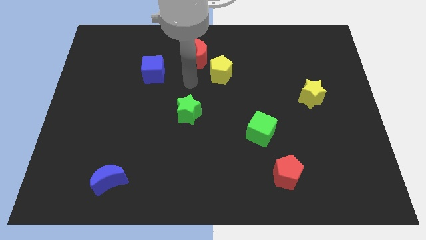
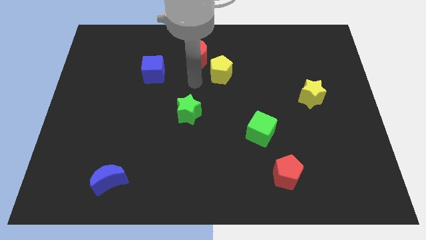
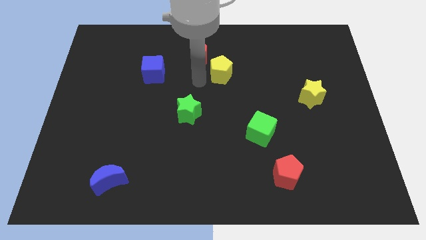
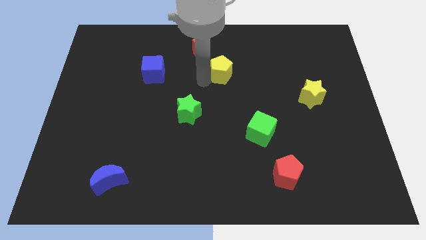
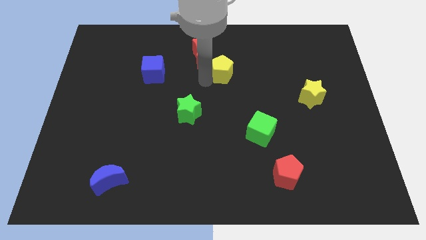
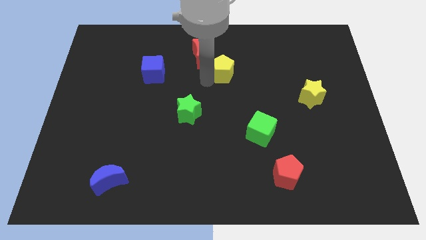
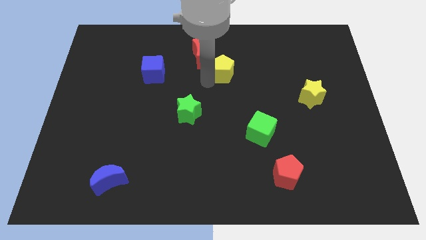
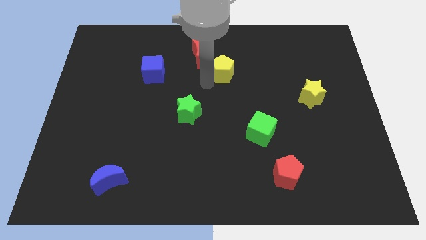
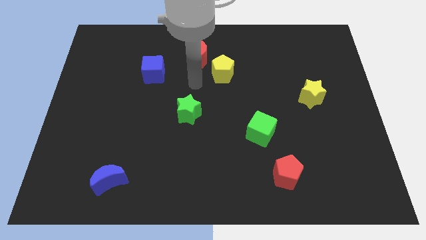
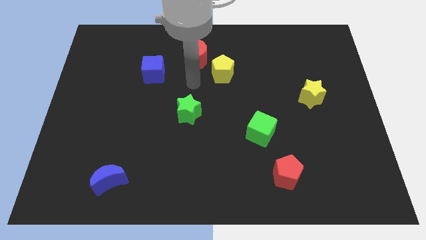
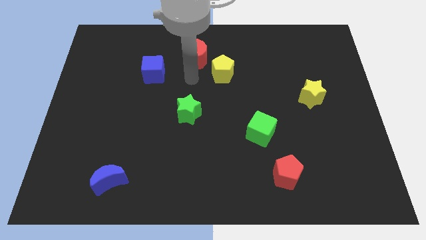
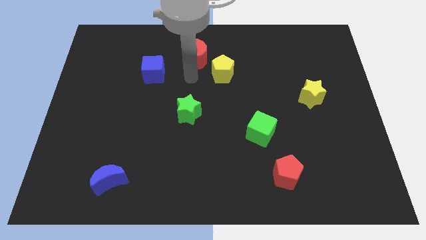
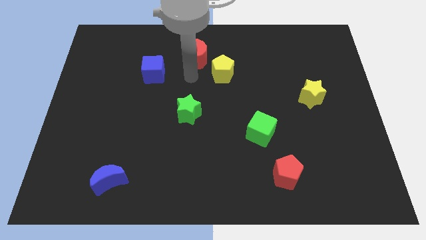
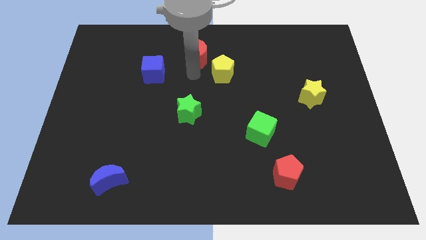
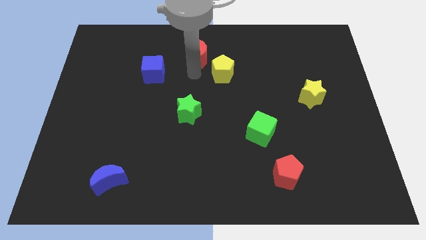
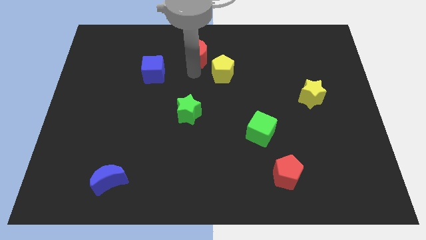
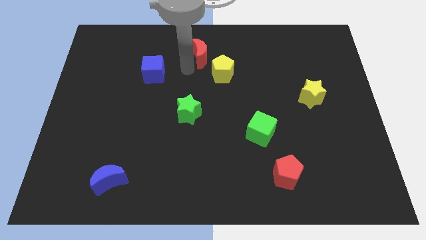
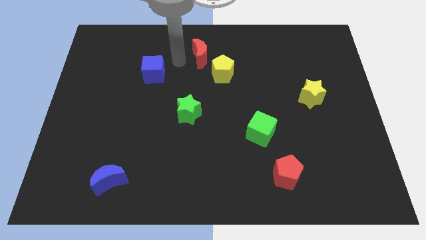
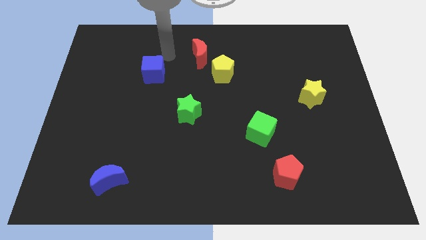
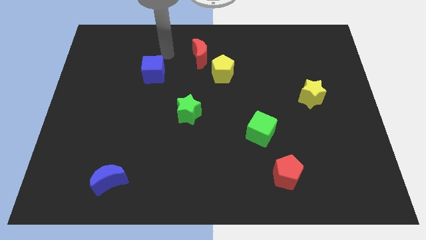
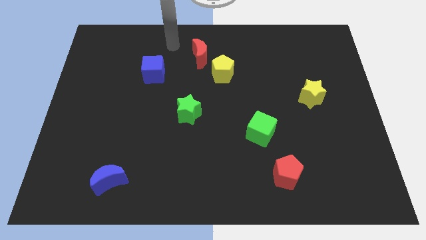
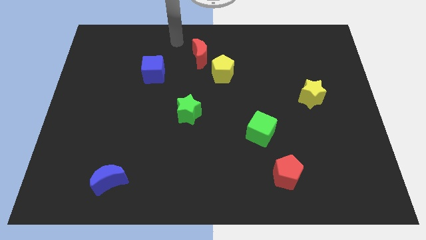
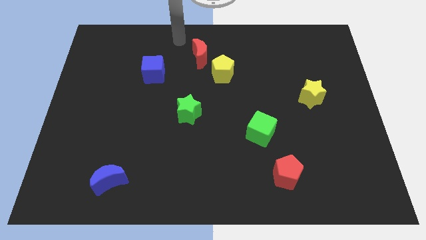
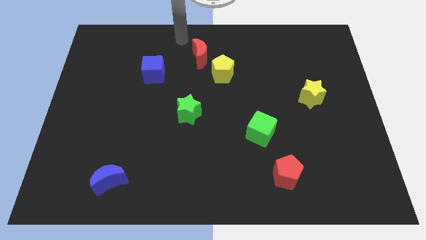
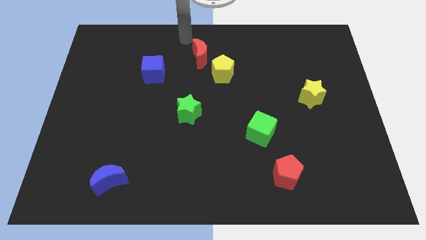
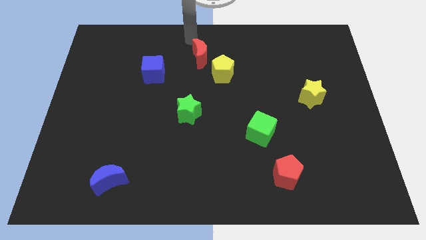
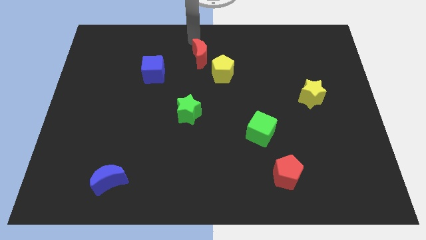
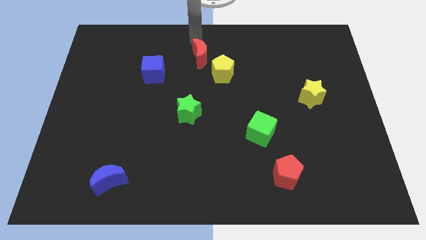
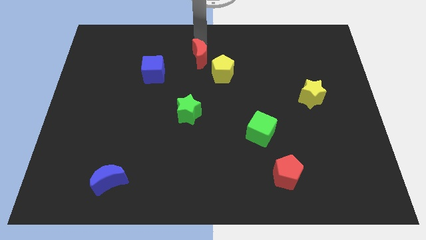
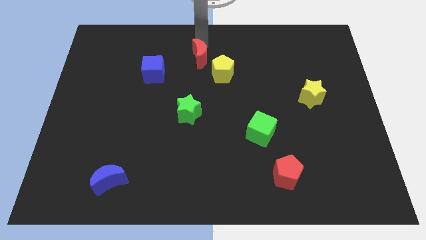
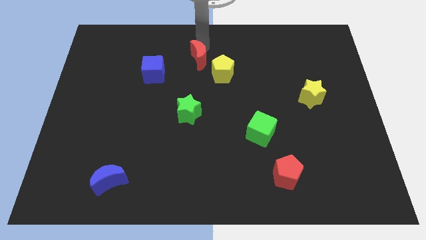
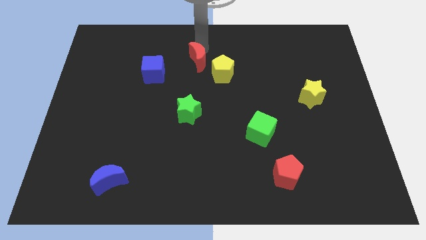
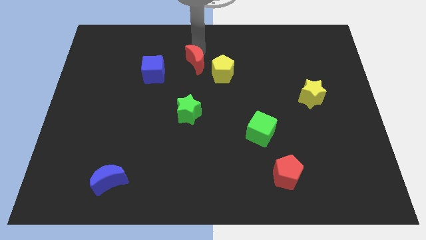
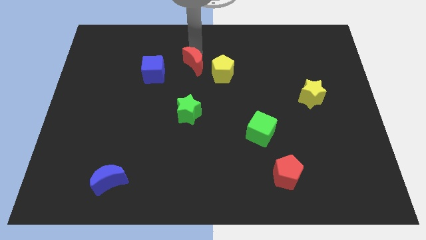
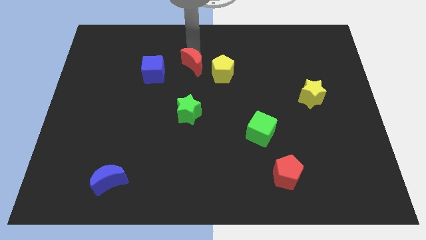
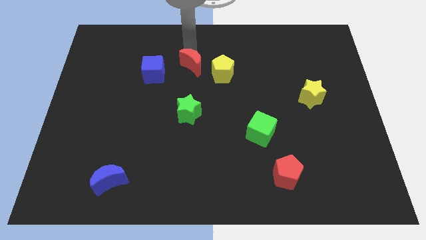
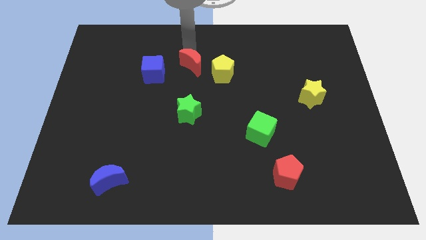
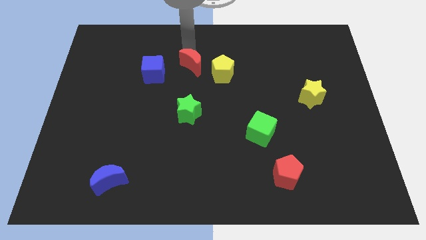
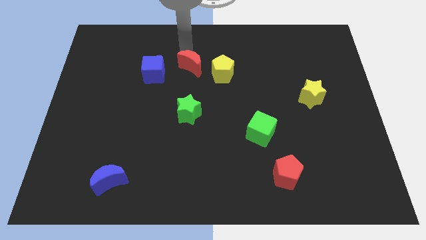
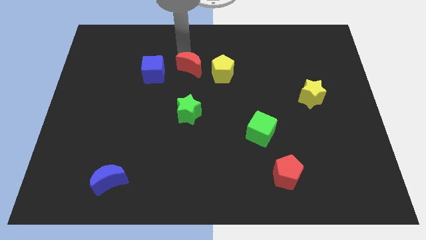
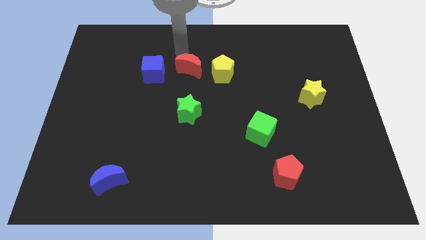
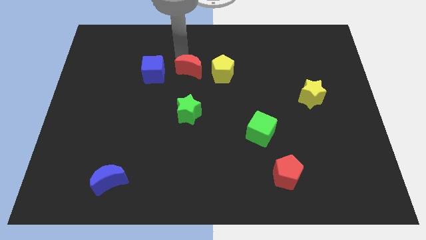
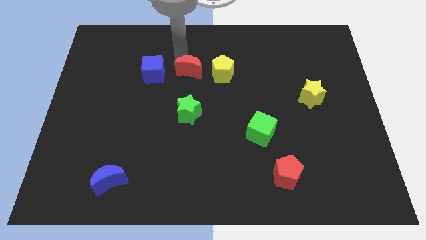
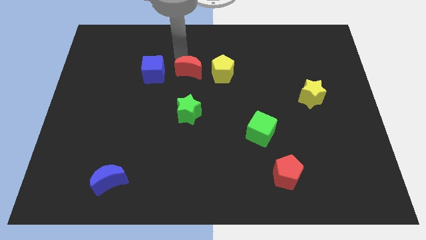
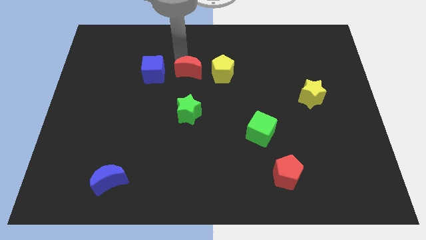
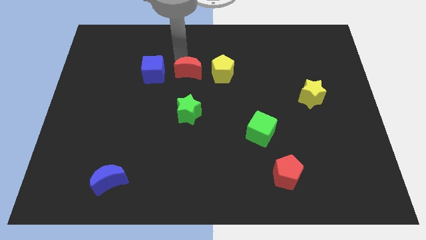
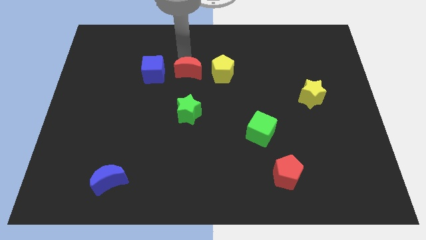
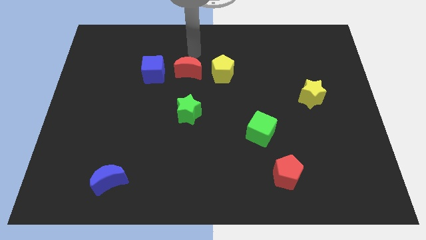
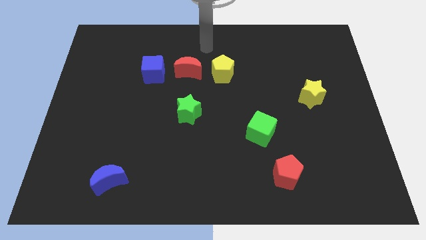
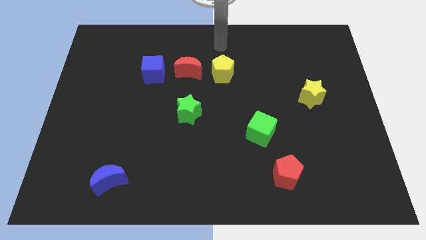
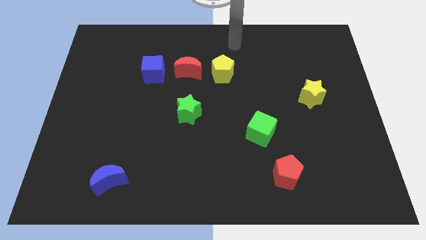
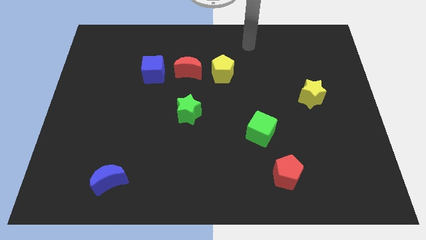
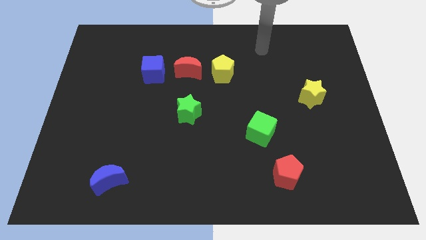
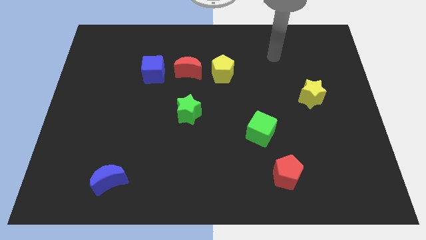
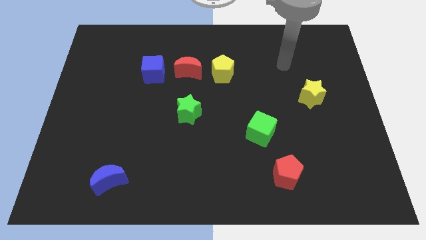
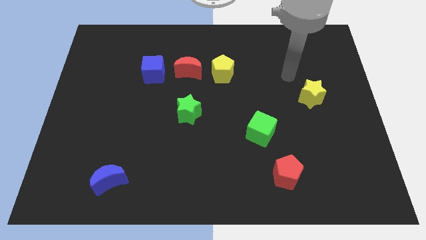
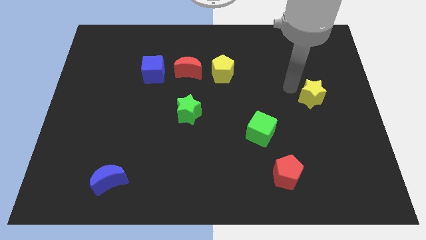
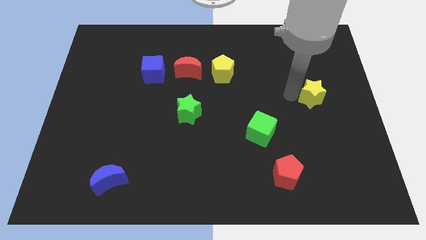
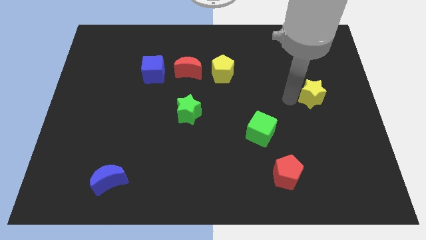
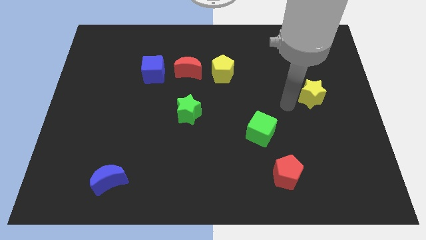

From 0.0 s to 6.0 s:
move the red moon between the blue cube and yellow pentagon

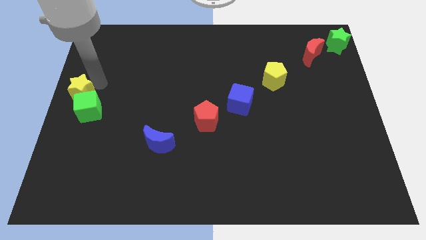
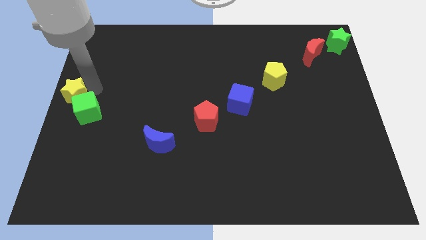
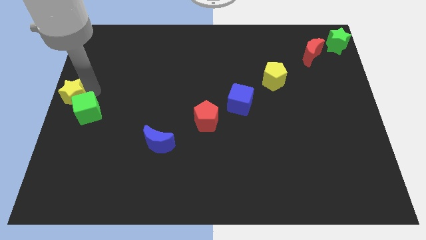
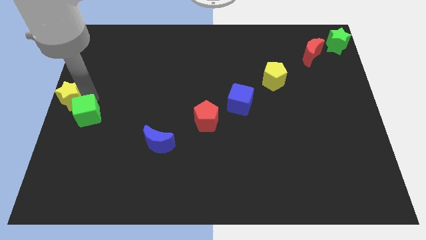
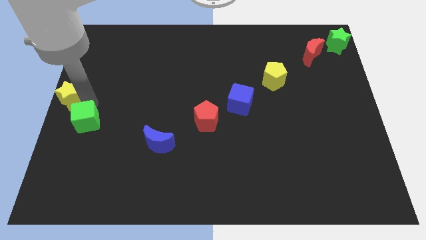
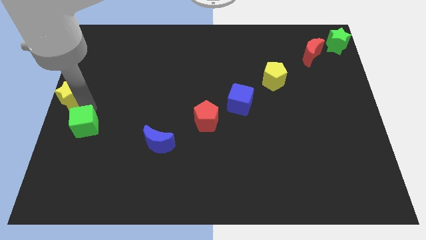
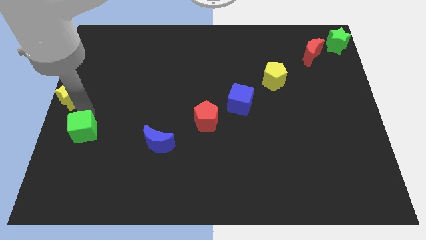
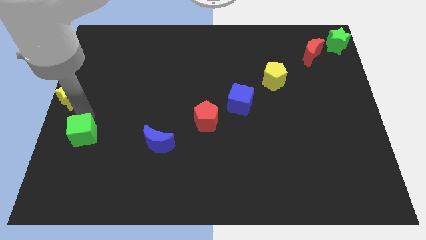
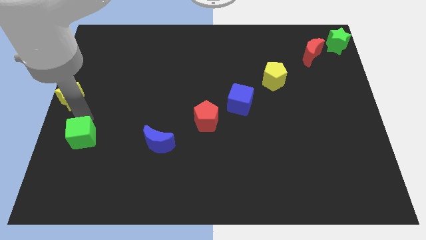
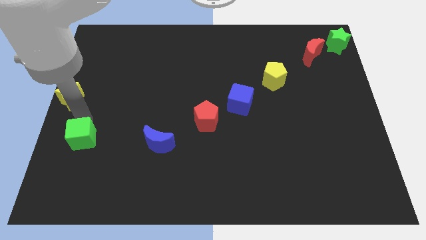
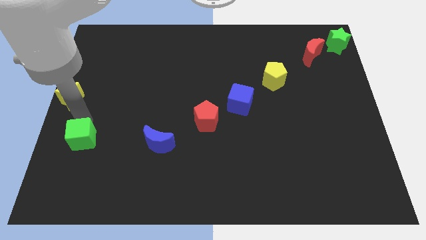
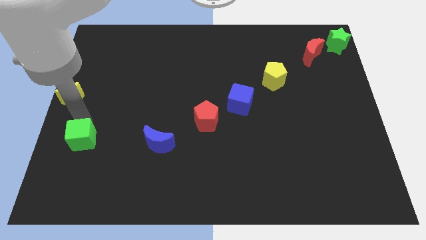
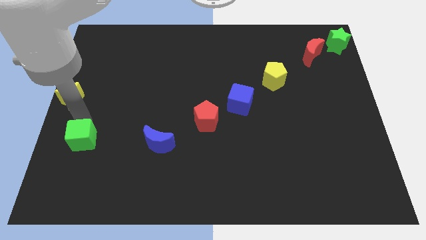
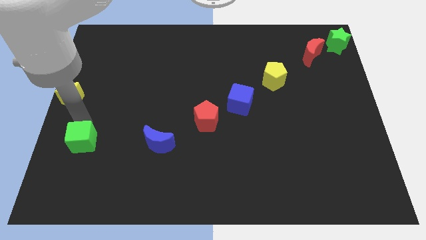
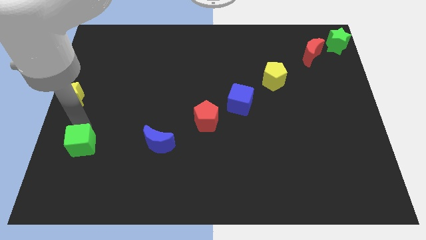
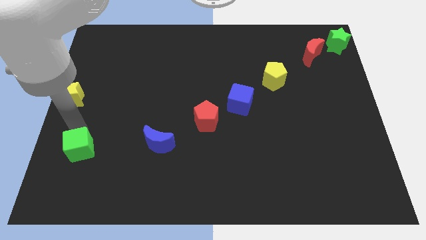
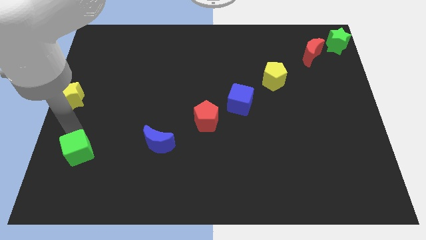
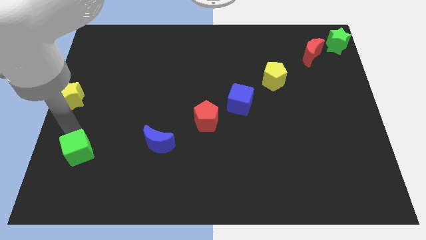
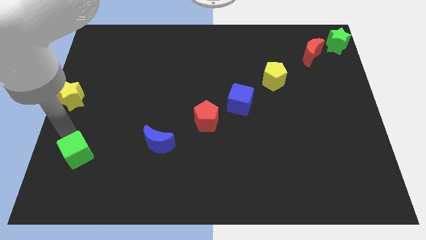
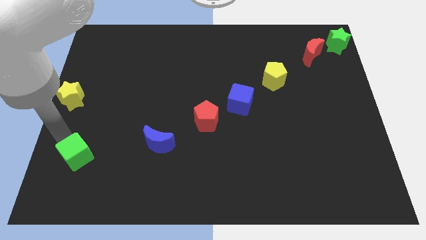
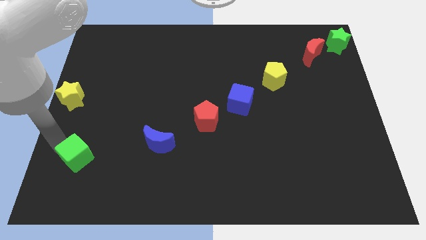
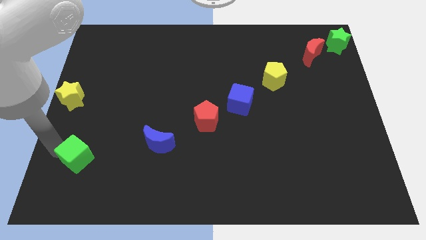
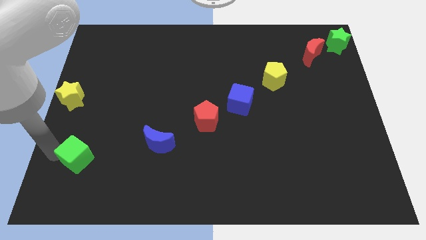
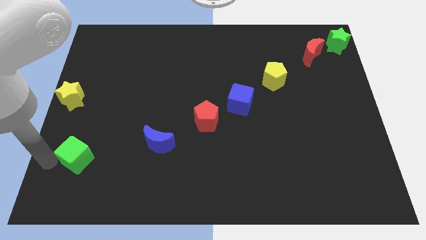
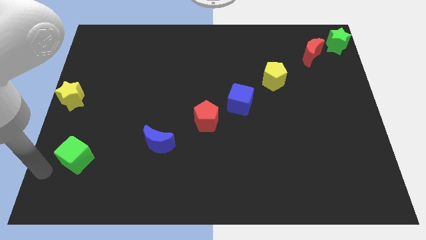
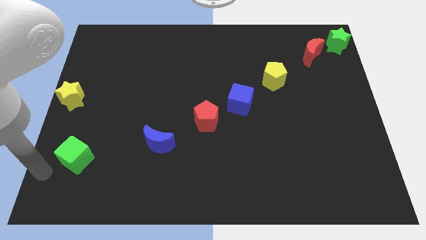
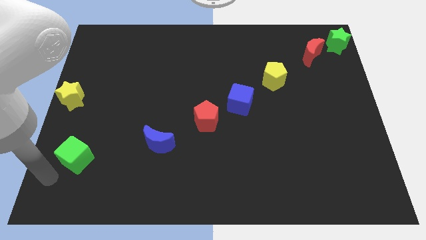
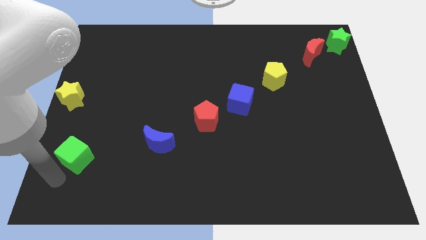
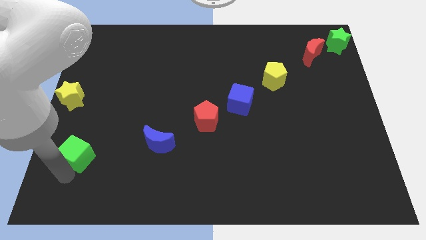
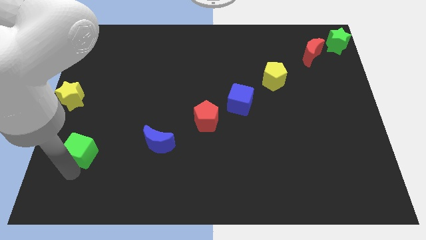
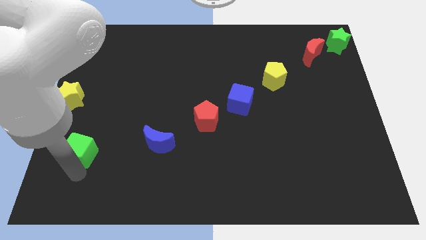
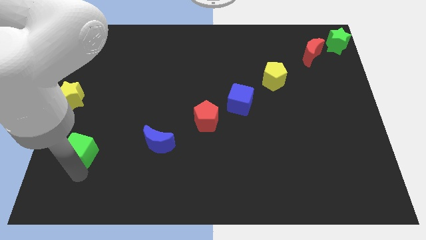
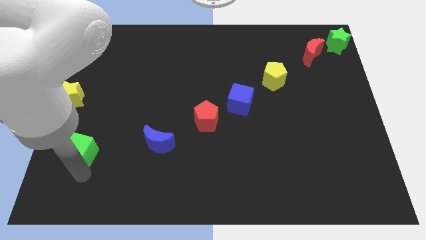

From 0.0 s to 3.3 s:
move the green cube away from the yellow star
